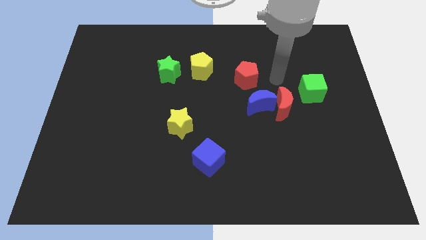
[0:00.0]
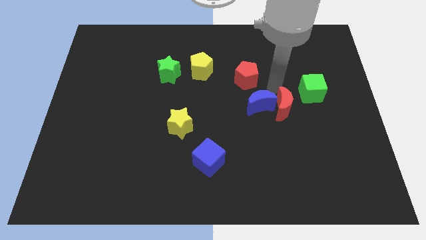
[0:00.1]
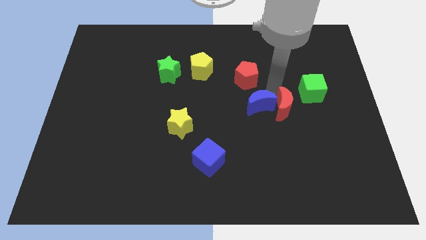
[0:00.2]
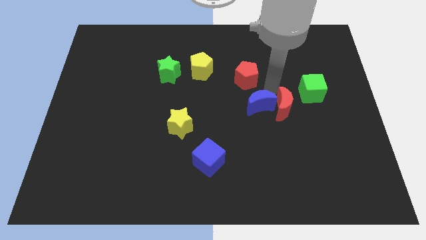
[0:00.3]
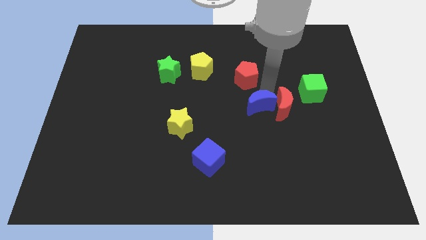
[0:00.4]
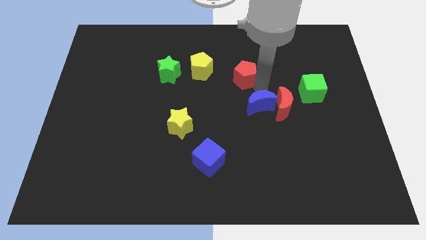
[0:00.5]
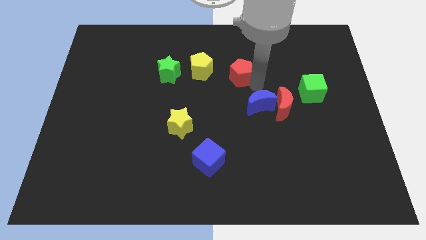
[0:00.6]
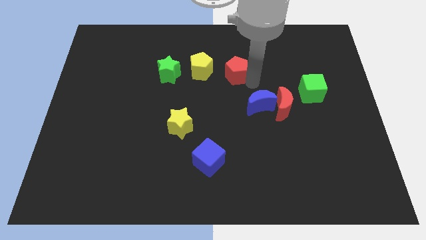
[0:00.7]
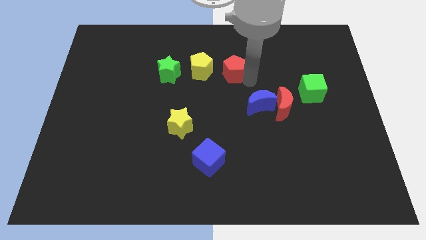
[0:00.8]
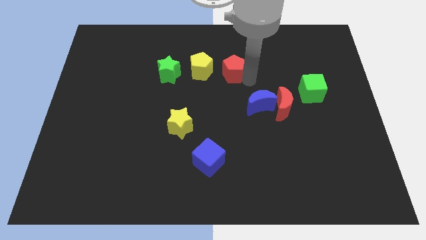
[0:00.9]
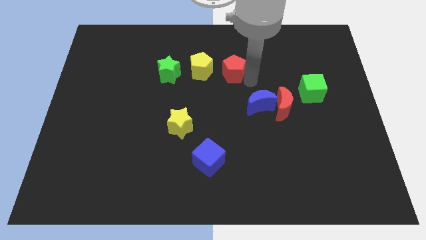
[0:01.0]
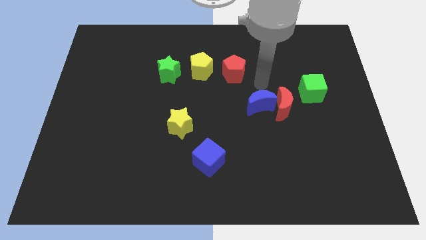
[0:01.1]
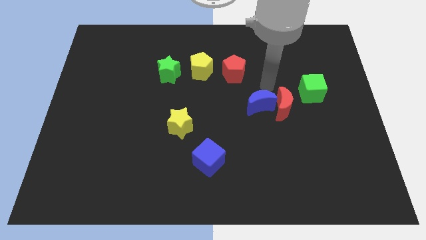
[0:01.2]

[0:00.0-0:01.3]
drag the red pentagon slightly left to the yellow pentagon

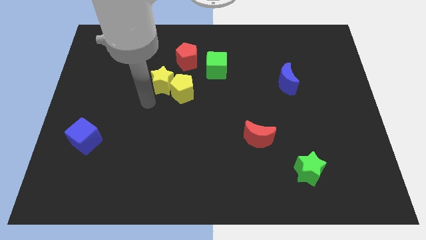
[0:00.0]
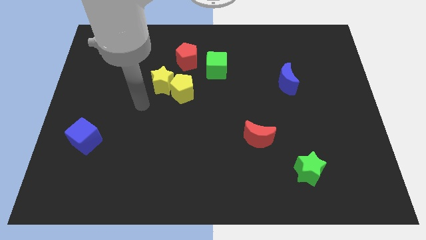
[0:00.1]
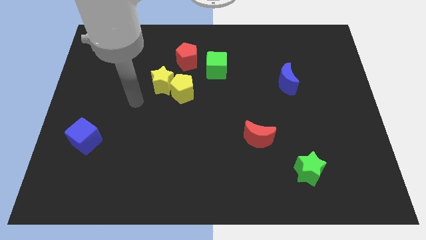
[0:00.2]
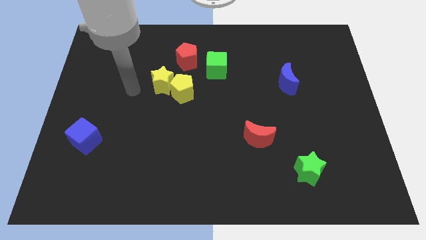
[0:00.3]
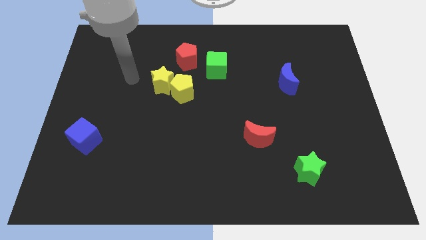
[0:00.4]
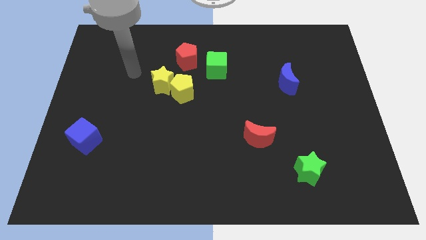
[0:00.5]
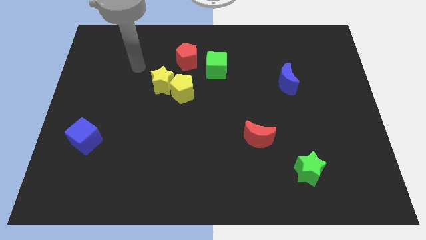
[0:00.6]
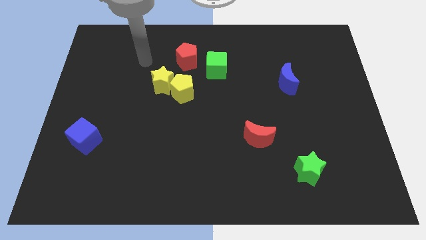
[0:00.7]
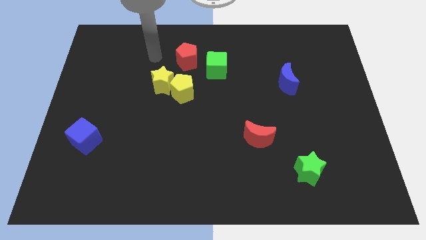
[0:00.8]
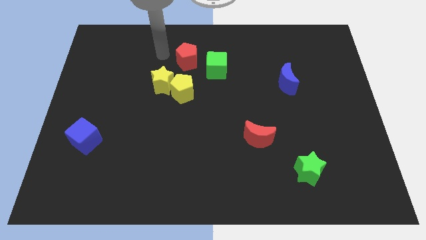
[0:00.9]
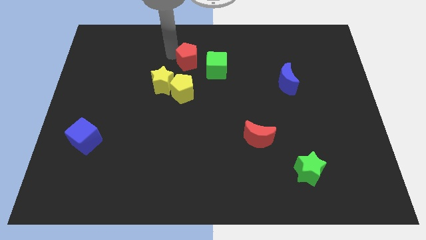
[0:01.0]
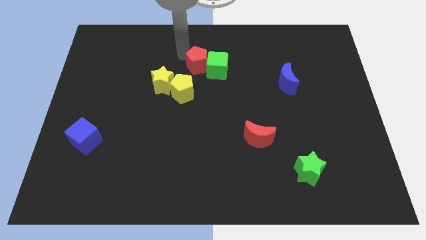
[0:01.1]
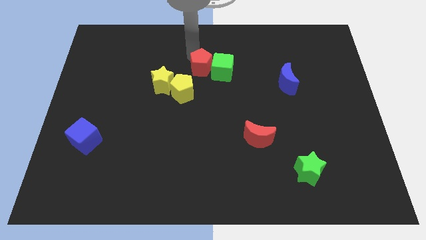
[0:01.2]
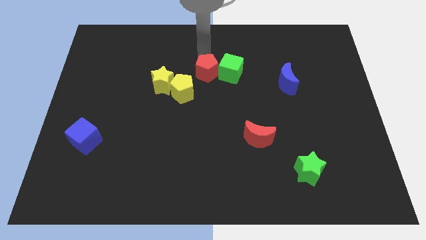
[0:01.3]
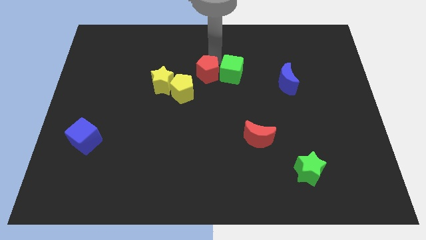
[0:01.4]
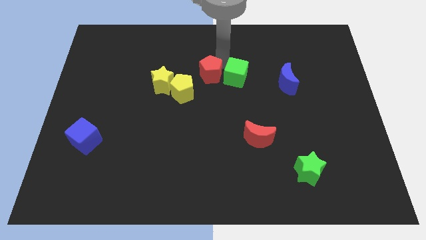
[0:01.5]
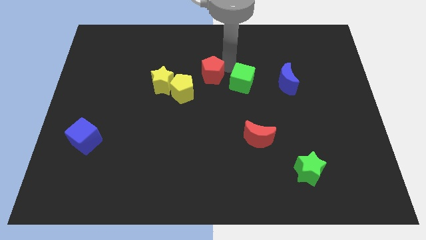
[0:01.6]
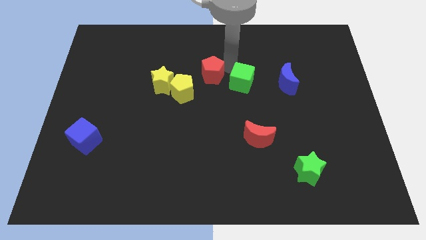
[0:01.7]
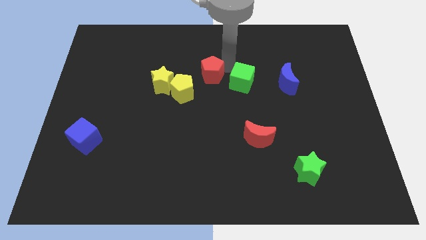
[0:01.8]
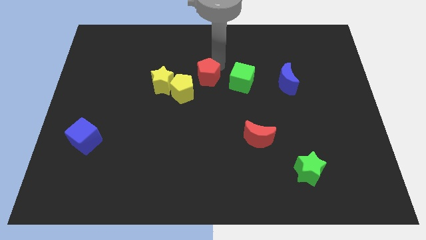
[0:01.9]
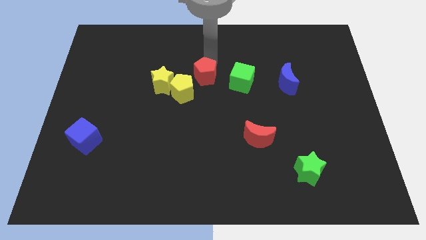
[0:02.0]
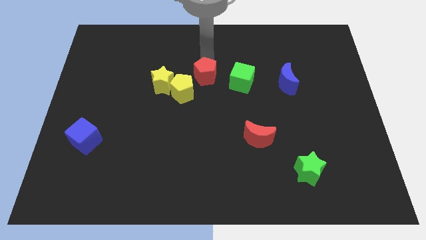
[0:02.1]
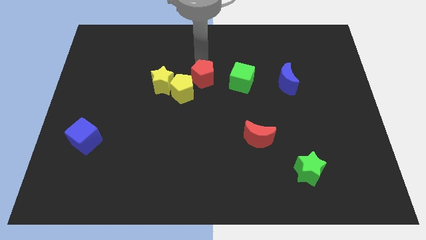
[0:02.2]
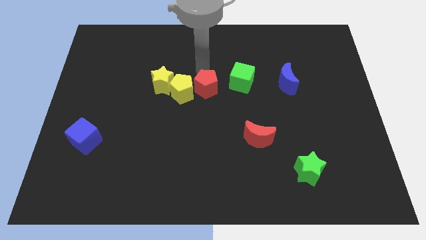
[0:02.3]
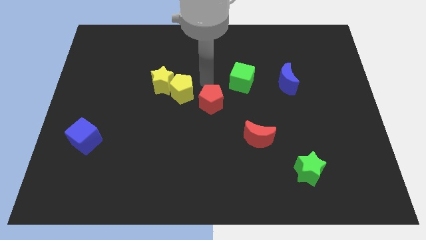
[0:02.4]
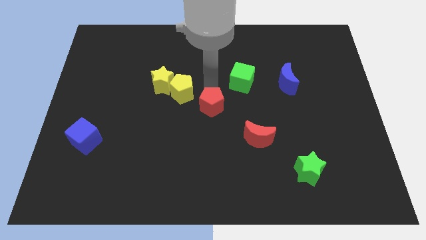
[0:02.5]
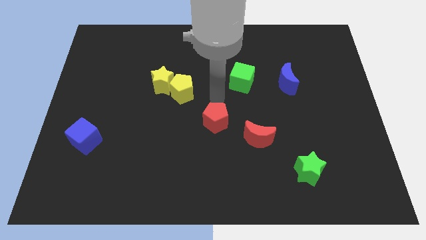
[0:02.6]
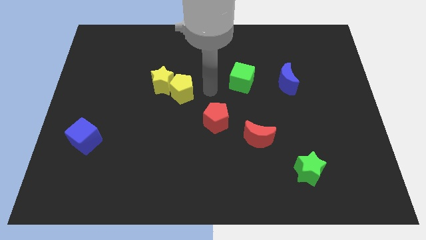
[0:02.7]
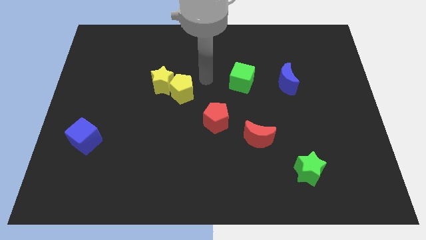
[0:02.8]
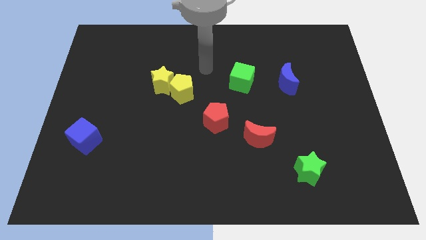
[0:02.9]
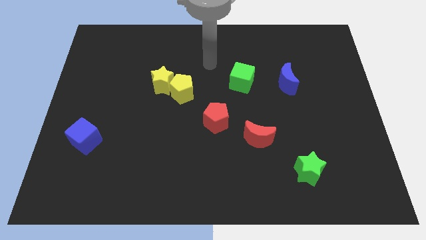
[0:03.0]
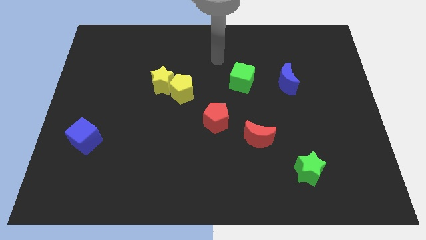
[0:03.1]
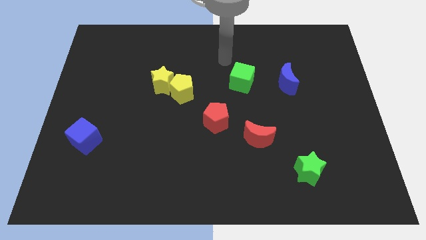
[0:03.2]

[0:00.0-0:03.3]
place the red pentagon diagonally in between the yellow pentagon and red moon

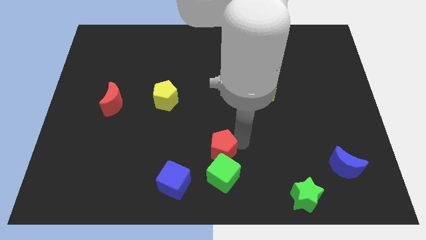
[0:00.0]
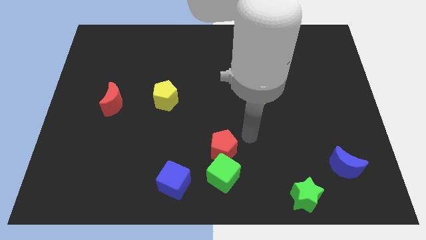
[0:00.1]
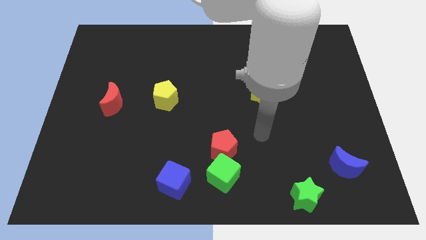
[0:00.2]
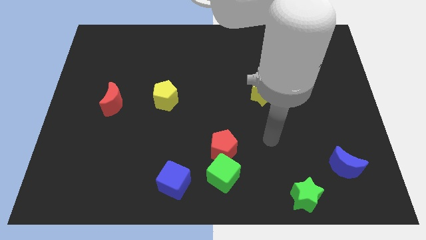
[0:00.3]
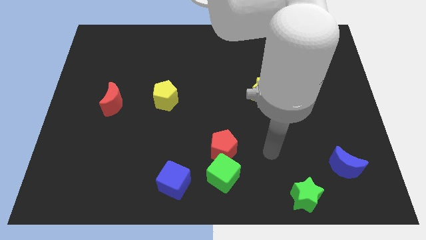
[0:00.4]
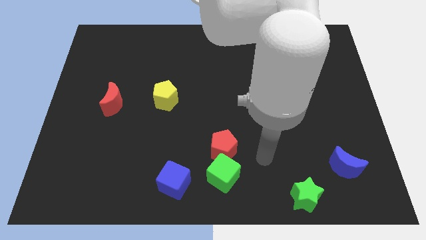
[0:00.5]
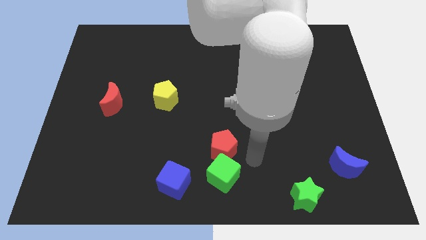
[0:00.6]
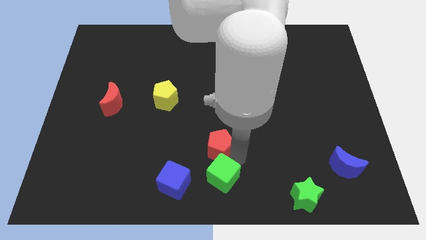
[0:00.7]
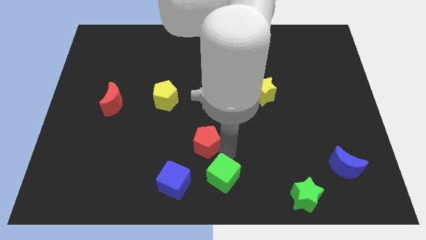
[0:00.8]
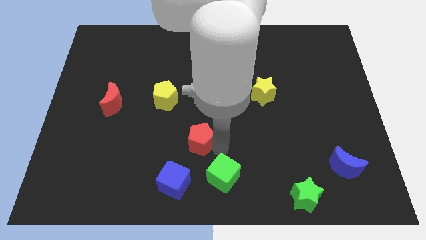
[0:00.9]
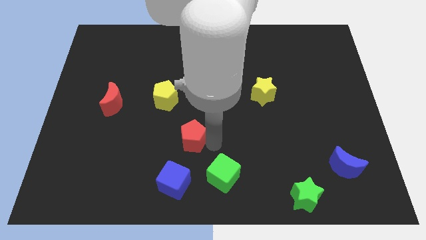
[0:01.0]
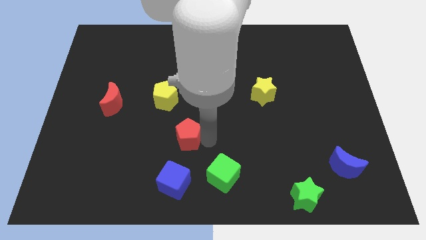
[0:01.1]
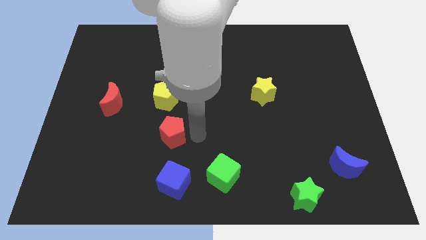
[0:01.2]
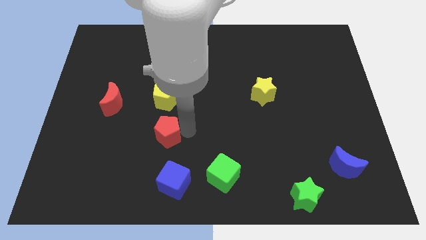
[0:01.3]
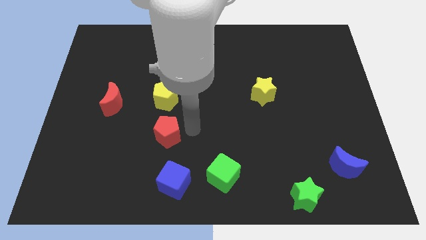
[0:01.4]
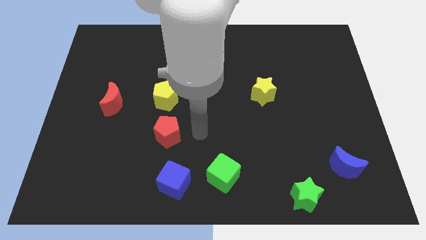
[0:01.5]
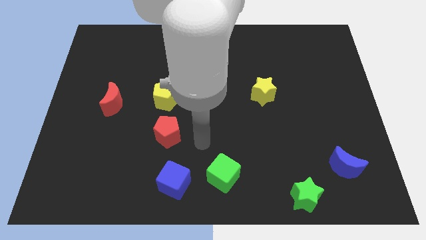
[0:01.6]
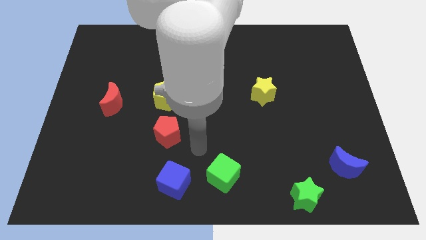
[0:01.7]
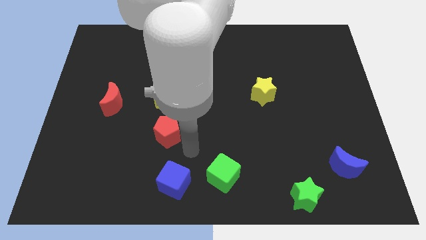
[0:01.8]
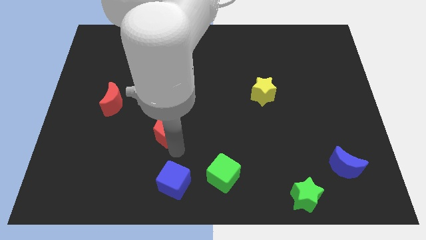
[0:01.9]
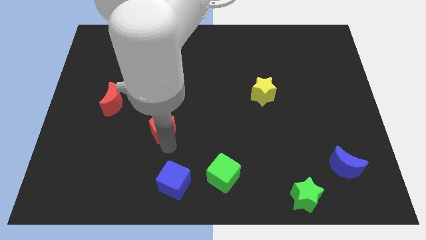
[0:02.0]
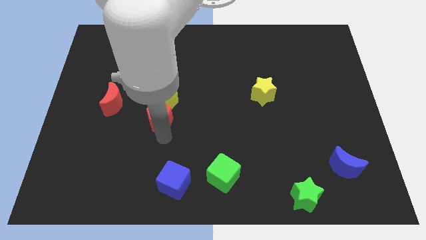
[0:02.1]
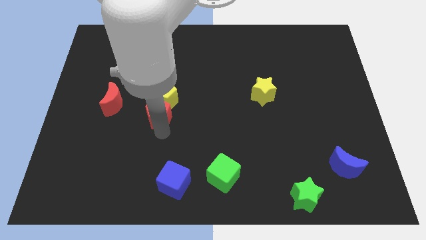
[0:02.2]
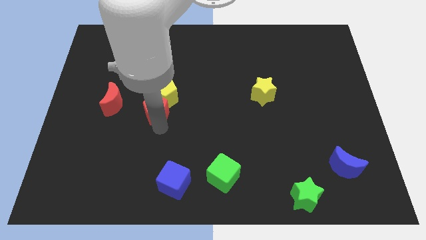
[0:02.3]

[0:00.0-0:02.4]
push the red pentagon into the yellow pentagon

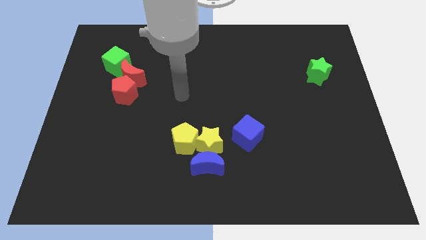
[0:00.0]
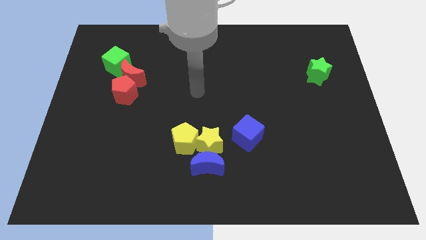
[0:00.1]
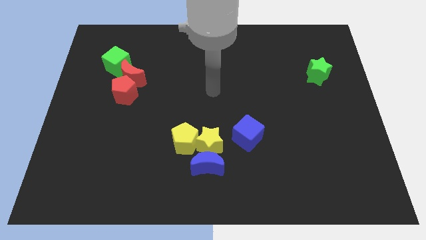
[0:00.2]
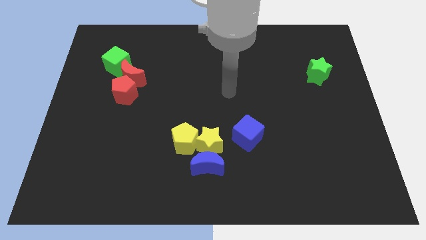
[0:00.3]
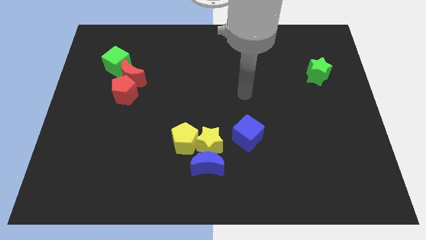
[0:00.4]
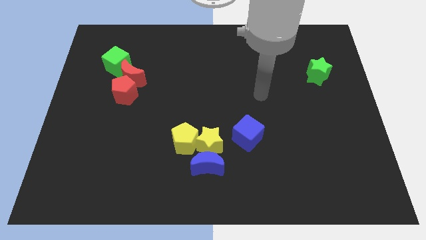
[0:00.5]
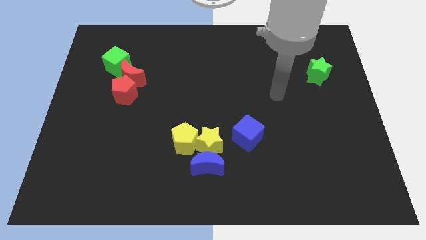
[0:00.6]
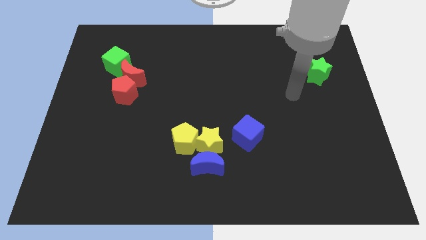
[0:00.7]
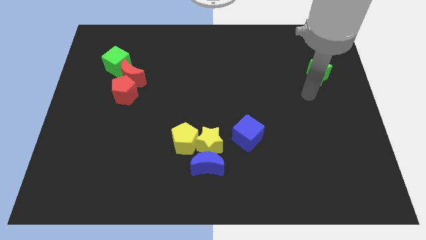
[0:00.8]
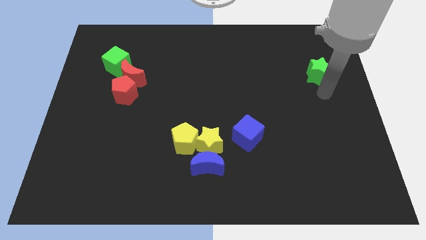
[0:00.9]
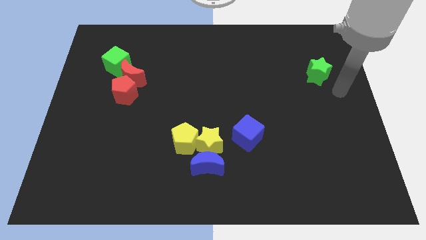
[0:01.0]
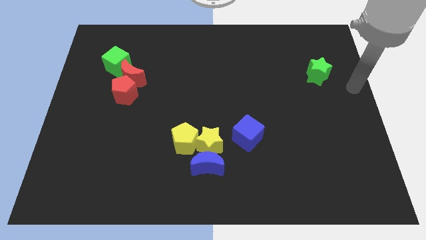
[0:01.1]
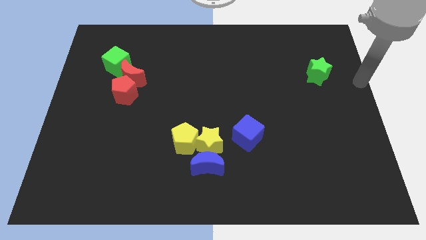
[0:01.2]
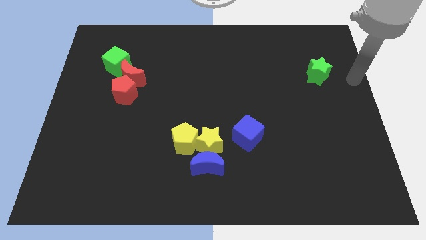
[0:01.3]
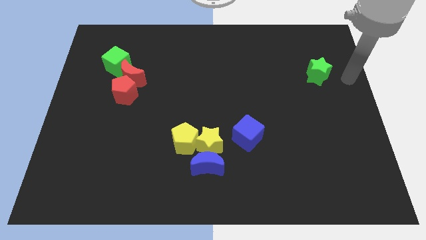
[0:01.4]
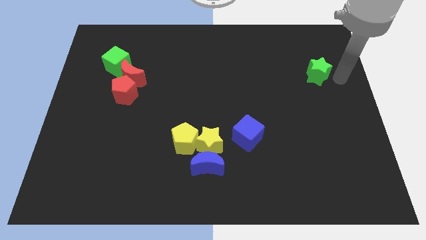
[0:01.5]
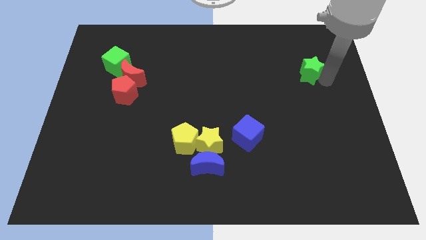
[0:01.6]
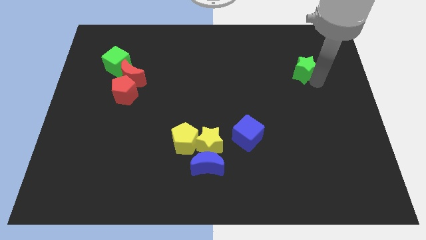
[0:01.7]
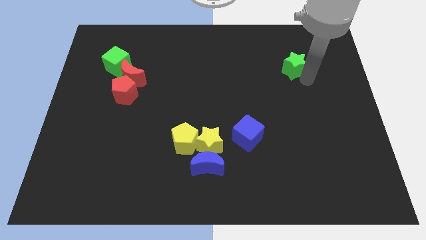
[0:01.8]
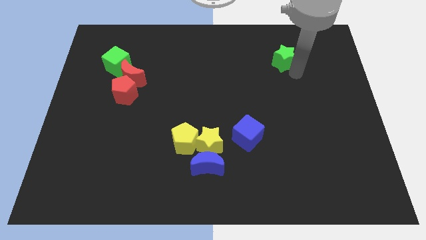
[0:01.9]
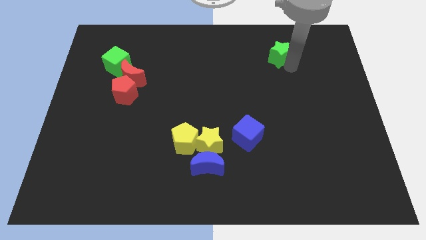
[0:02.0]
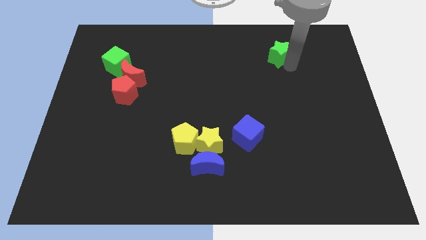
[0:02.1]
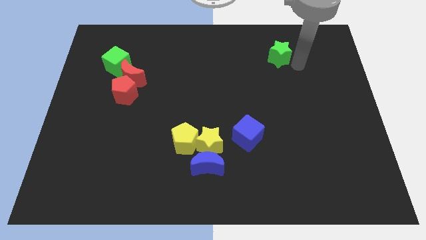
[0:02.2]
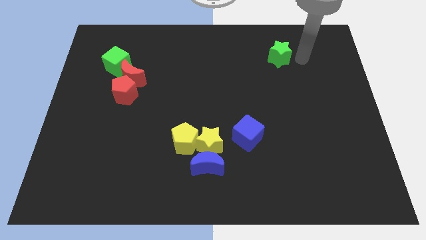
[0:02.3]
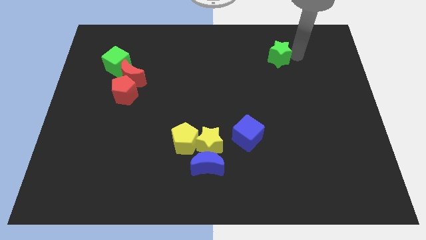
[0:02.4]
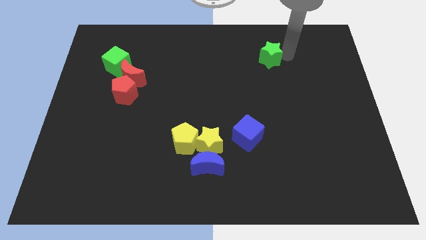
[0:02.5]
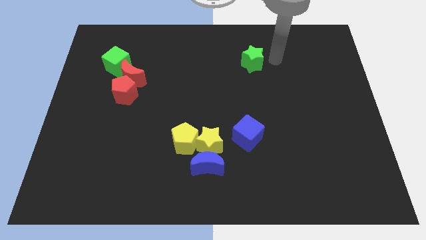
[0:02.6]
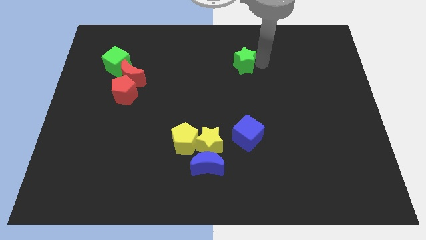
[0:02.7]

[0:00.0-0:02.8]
push the green star slightly to the left of the board
